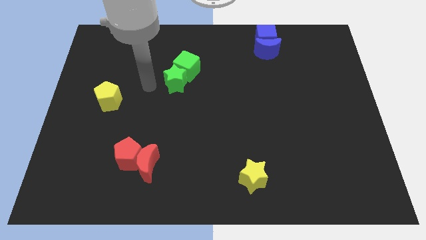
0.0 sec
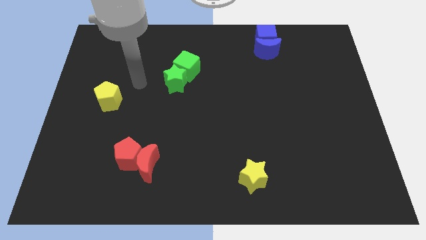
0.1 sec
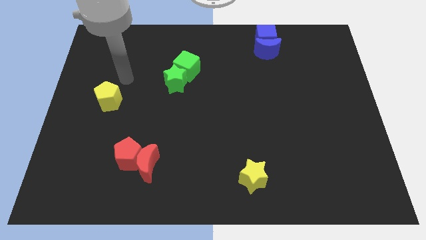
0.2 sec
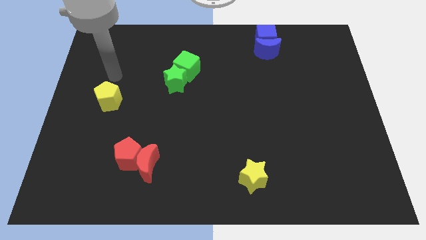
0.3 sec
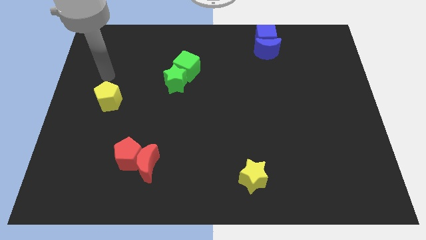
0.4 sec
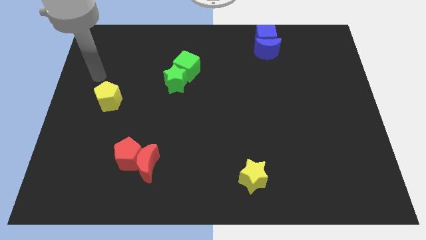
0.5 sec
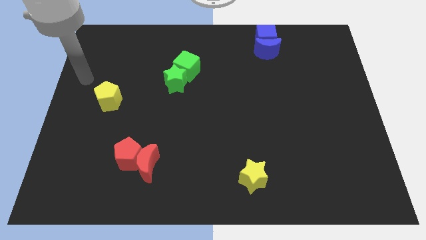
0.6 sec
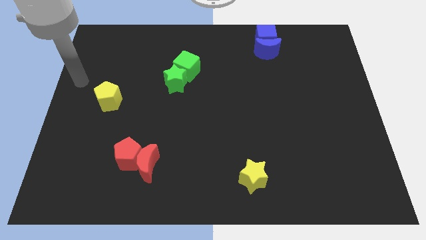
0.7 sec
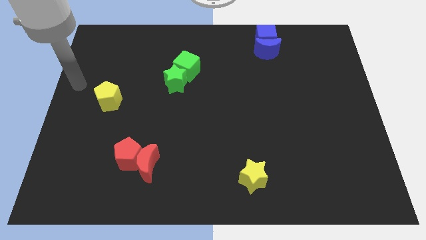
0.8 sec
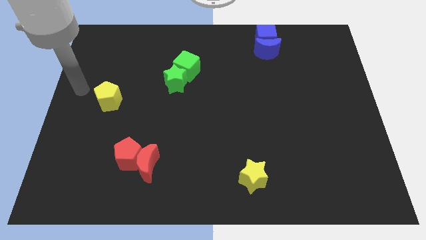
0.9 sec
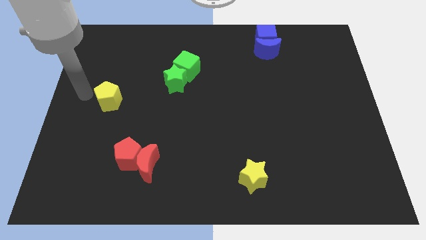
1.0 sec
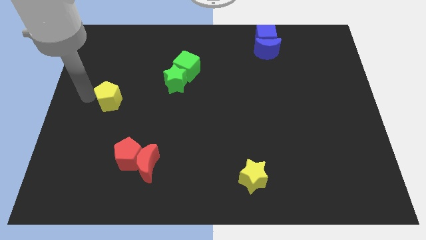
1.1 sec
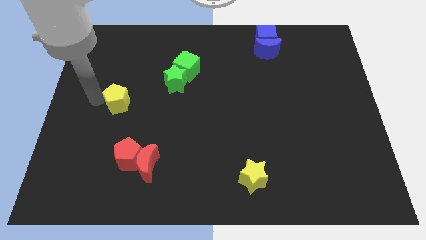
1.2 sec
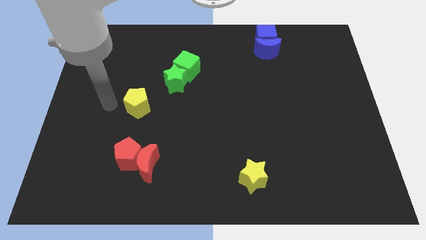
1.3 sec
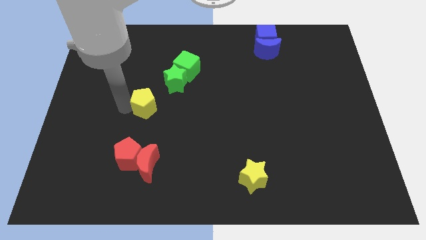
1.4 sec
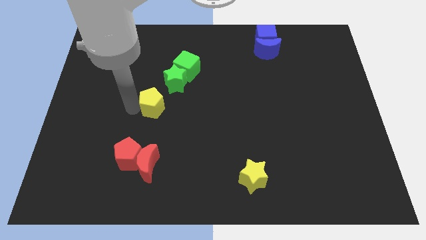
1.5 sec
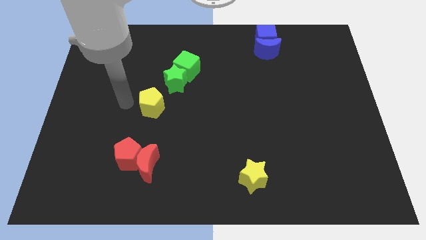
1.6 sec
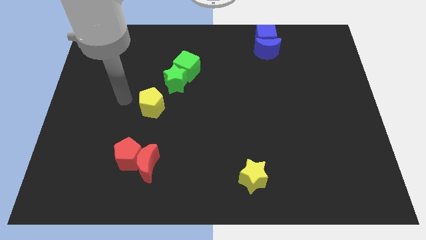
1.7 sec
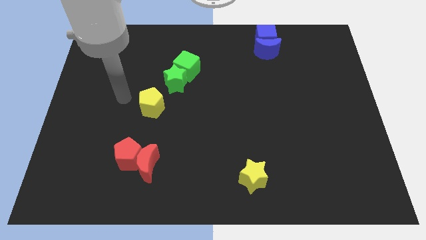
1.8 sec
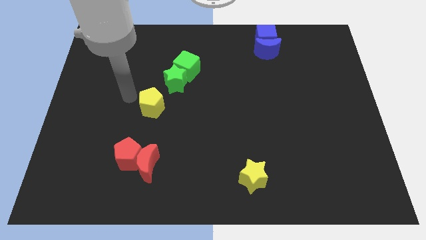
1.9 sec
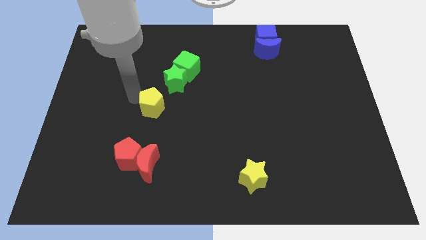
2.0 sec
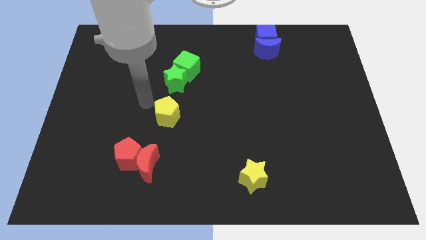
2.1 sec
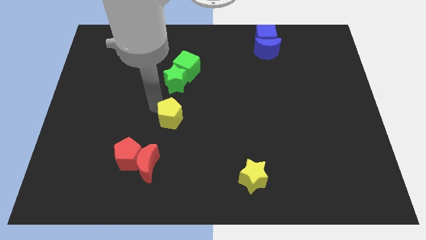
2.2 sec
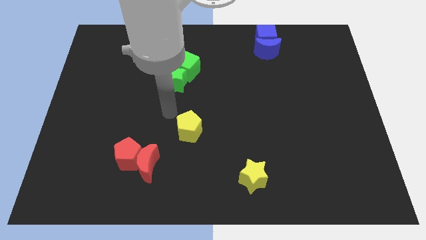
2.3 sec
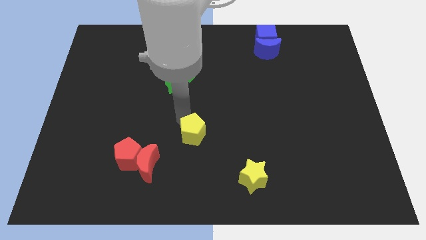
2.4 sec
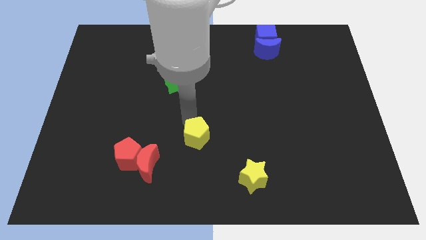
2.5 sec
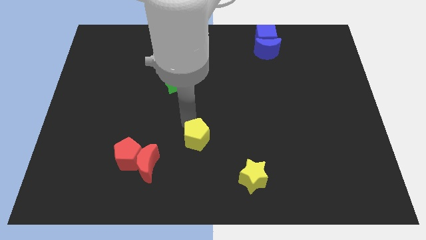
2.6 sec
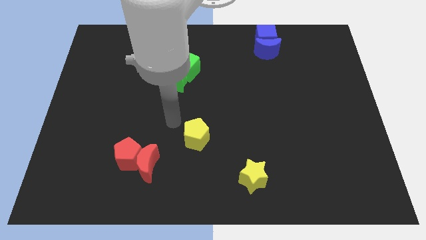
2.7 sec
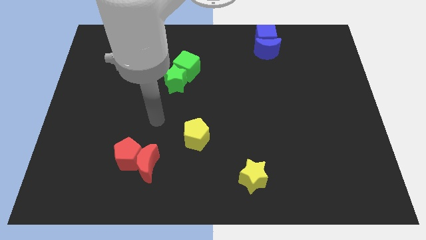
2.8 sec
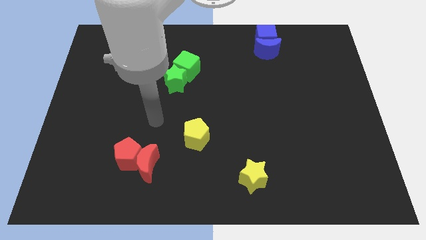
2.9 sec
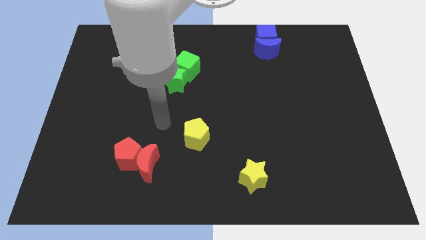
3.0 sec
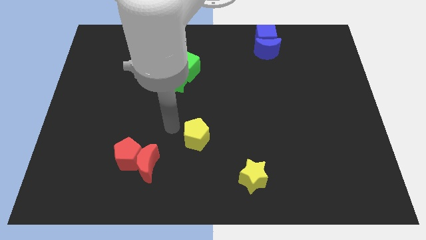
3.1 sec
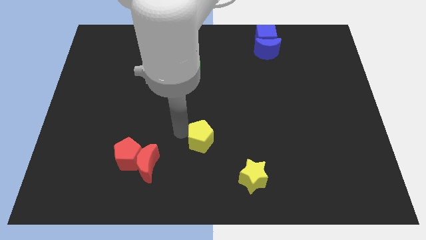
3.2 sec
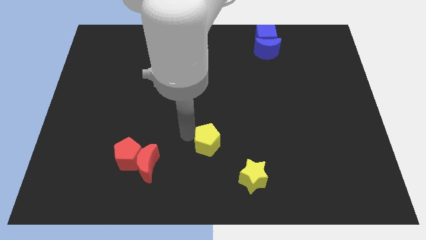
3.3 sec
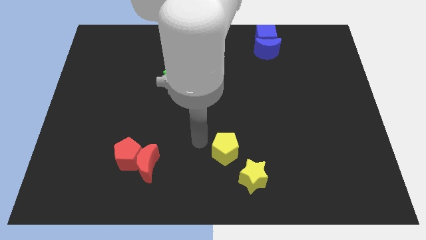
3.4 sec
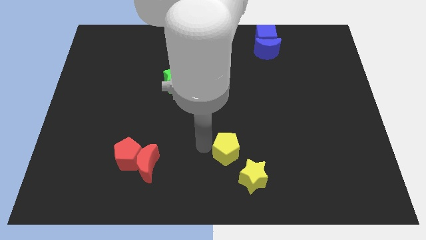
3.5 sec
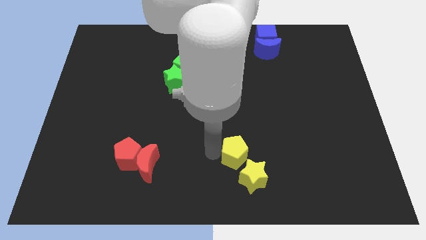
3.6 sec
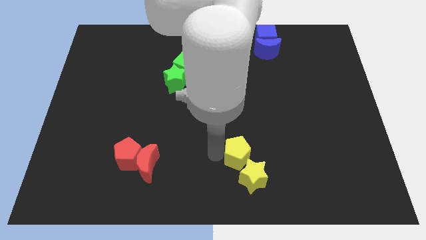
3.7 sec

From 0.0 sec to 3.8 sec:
place the yellow pentagon at the top left side of yellow star

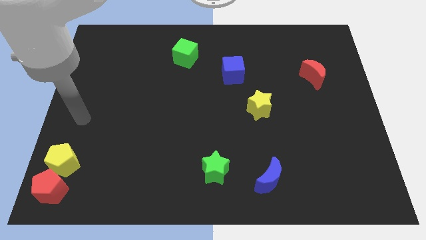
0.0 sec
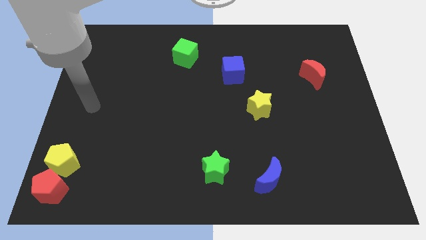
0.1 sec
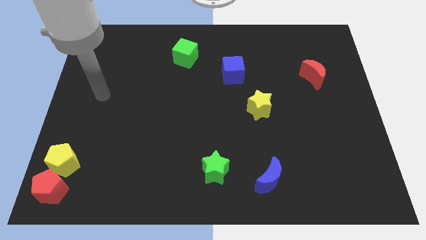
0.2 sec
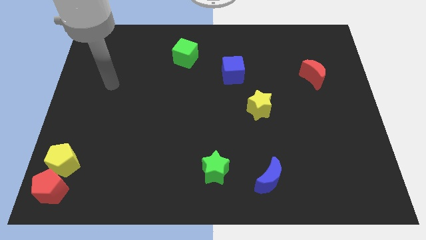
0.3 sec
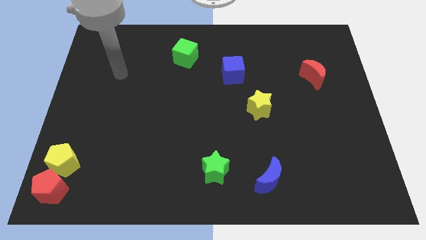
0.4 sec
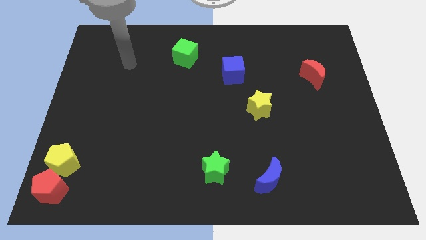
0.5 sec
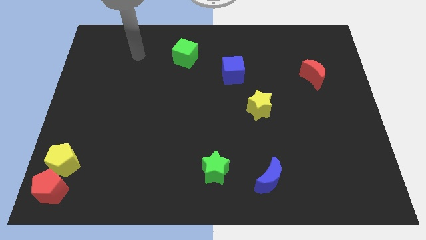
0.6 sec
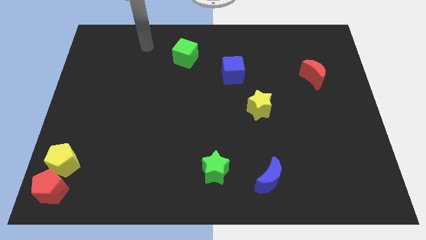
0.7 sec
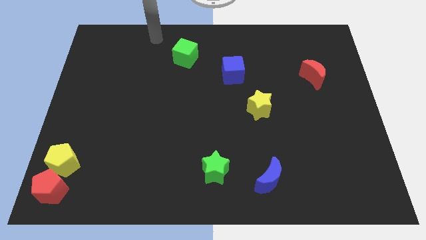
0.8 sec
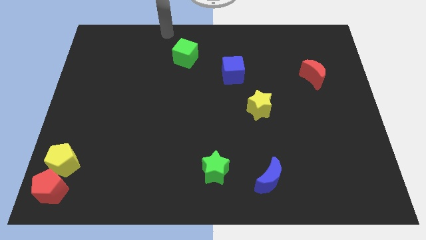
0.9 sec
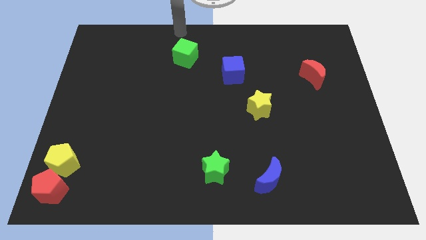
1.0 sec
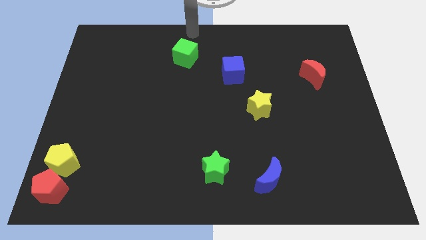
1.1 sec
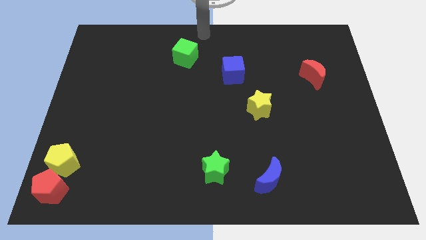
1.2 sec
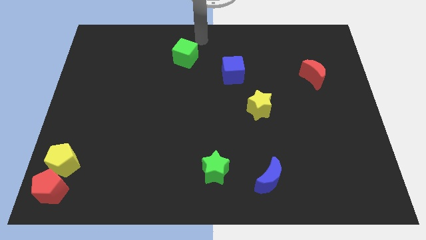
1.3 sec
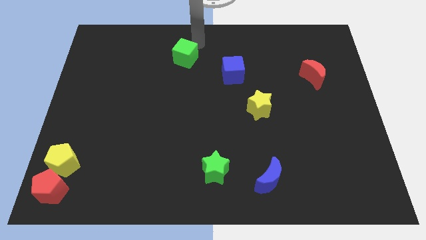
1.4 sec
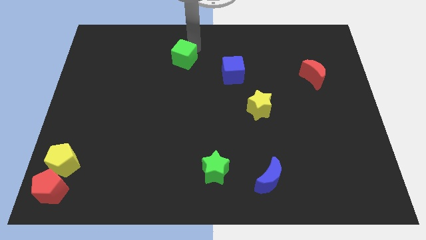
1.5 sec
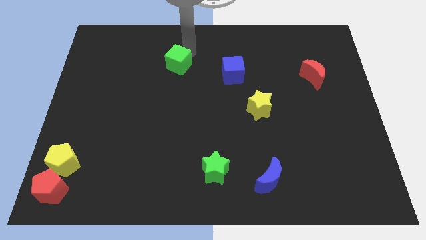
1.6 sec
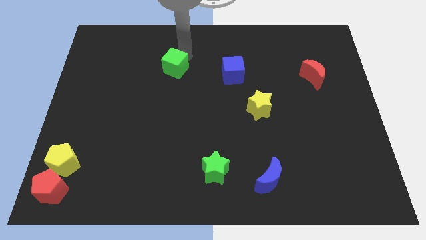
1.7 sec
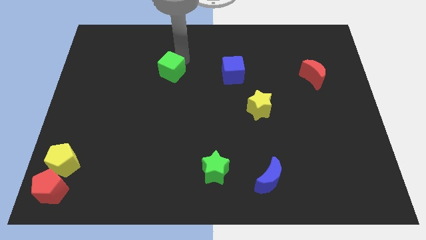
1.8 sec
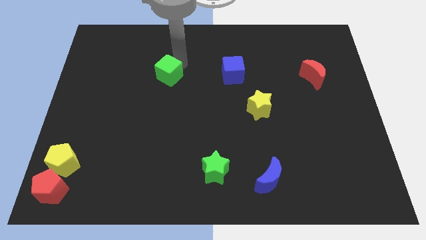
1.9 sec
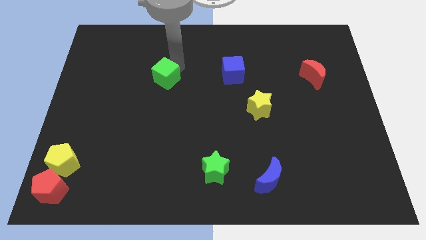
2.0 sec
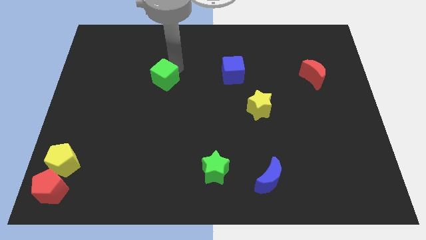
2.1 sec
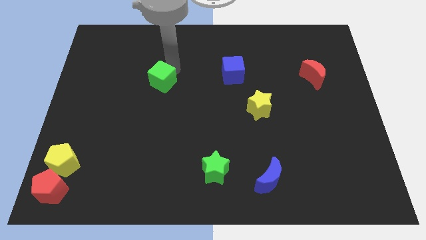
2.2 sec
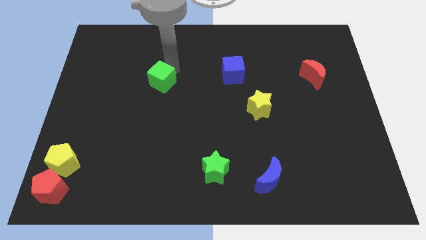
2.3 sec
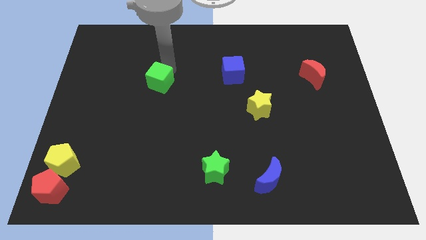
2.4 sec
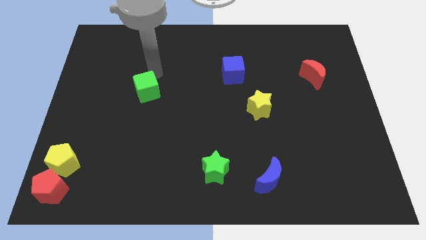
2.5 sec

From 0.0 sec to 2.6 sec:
push green cube slightly downwards

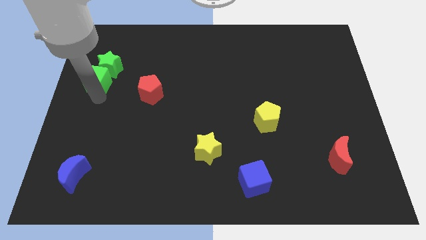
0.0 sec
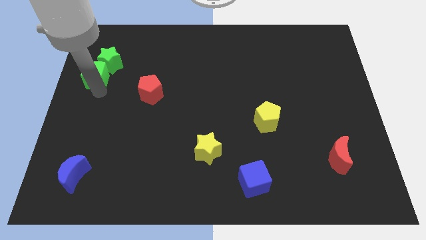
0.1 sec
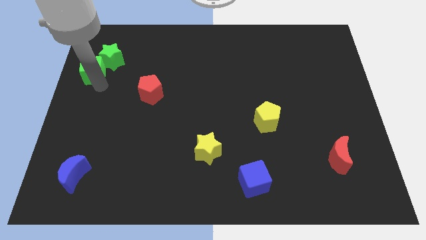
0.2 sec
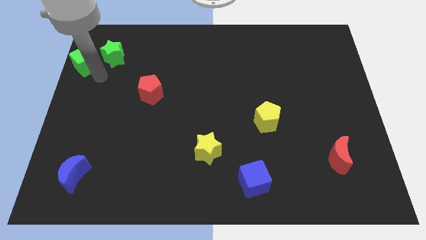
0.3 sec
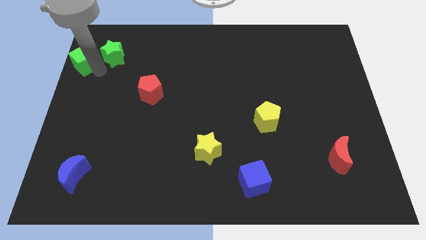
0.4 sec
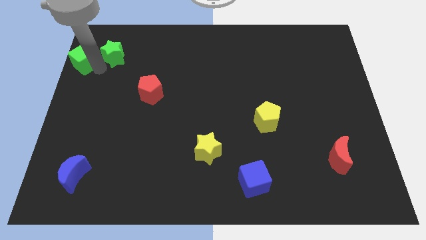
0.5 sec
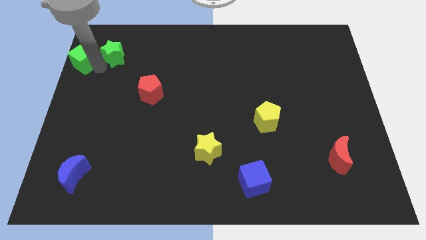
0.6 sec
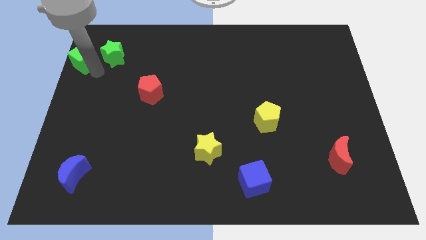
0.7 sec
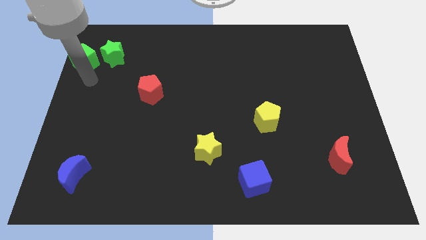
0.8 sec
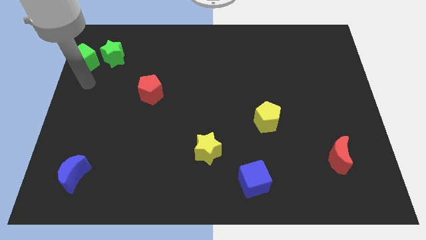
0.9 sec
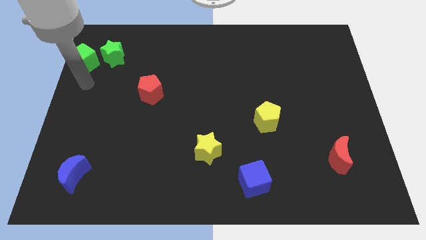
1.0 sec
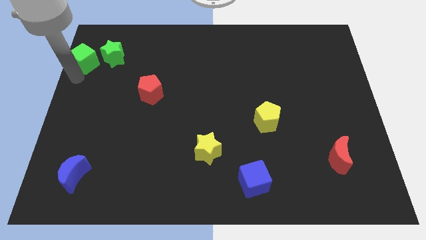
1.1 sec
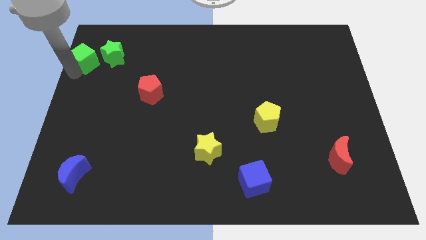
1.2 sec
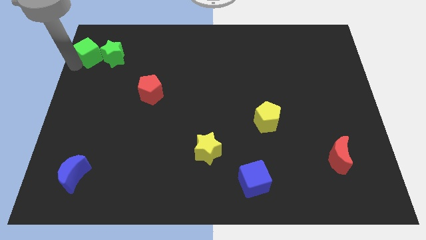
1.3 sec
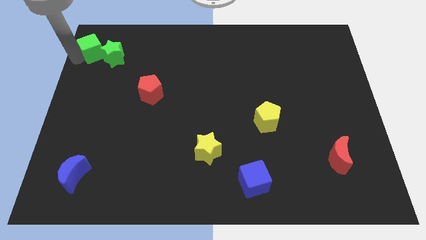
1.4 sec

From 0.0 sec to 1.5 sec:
push green cube beside green star

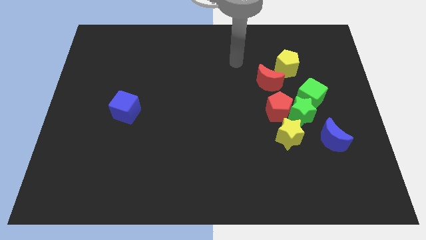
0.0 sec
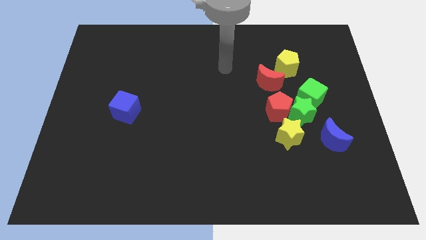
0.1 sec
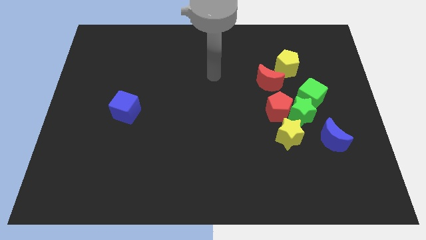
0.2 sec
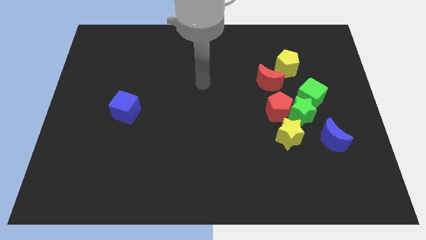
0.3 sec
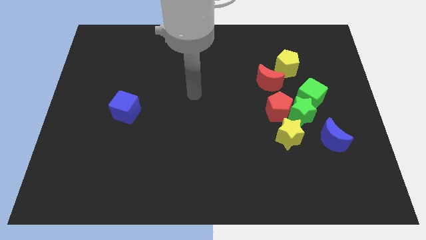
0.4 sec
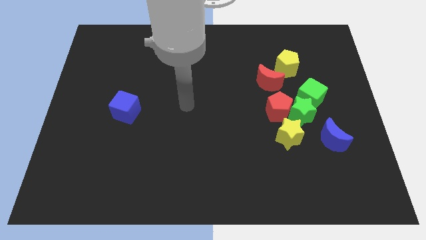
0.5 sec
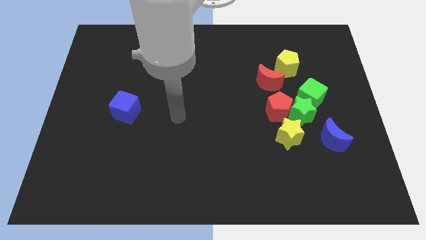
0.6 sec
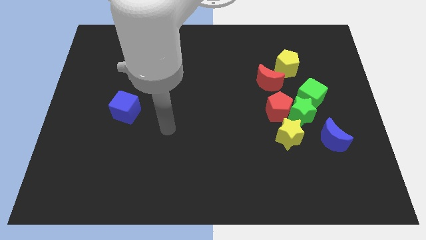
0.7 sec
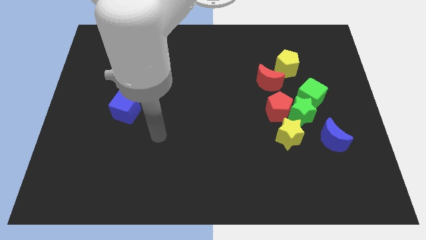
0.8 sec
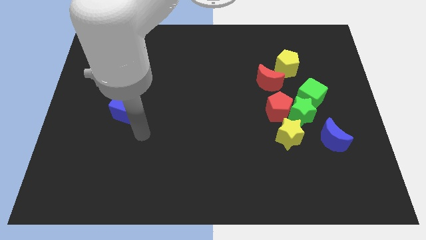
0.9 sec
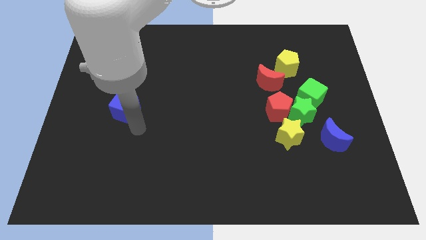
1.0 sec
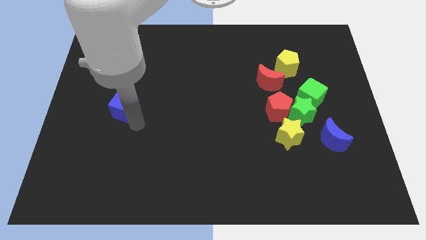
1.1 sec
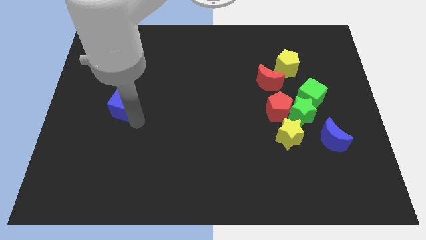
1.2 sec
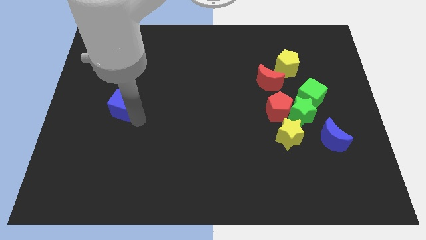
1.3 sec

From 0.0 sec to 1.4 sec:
move close to the blue cube
